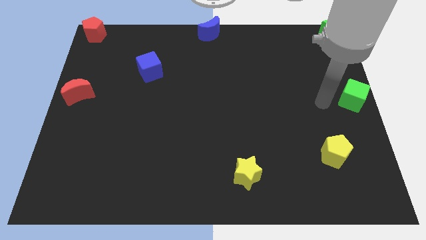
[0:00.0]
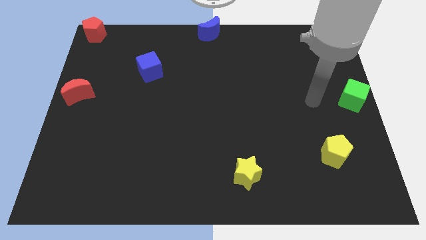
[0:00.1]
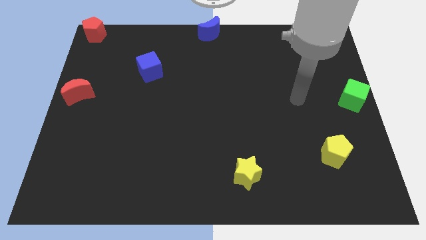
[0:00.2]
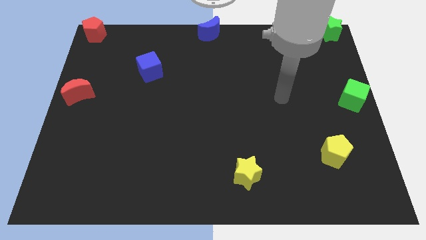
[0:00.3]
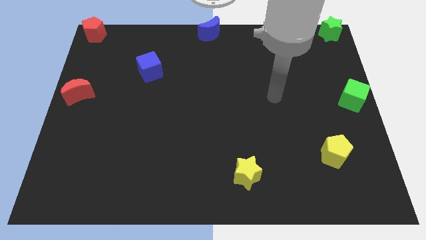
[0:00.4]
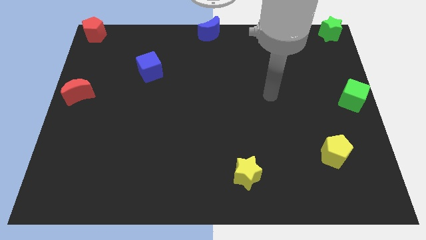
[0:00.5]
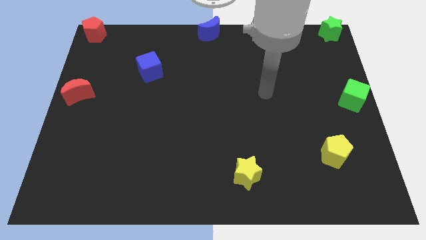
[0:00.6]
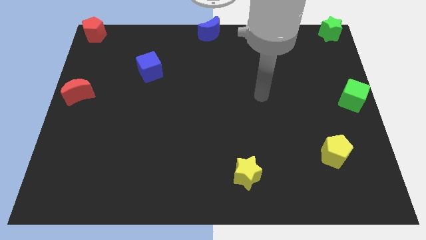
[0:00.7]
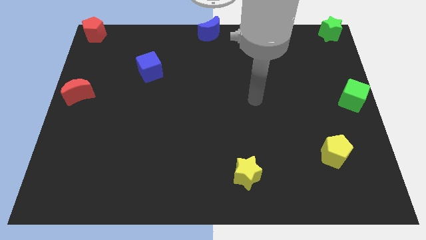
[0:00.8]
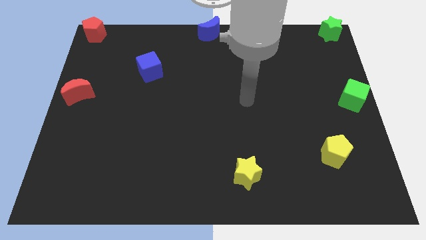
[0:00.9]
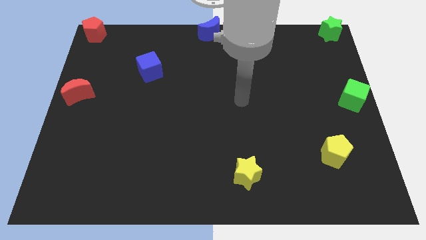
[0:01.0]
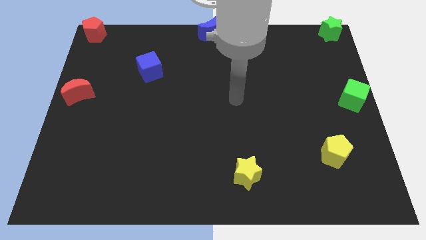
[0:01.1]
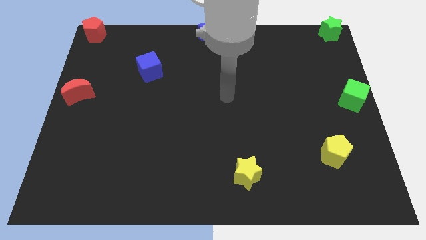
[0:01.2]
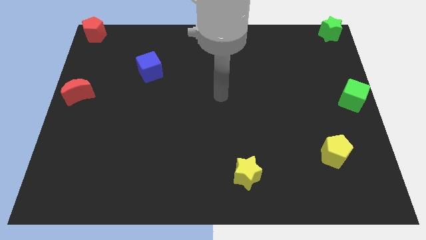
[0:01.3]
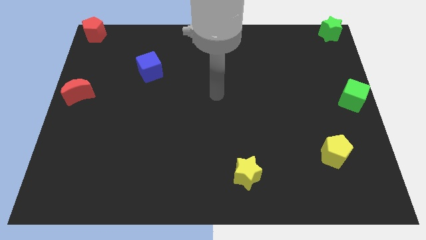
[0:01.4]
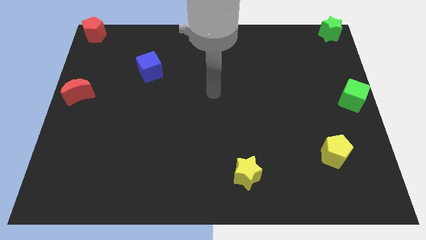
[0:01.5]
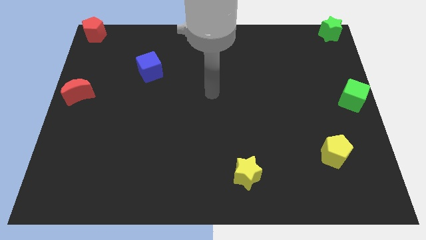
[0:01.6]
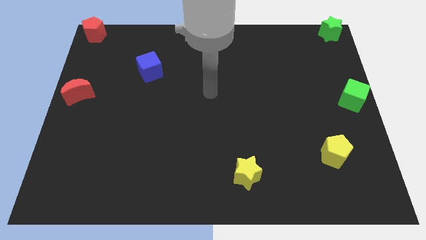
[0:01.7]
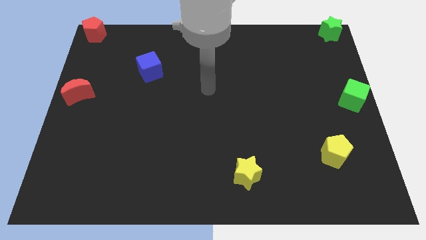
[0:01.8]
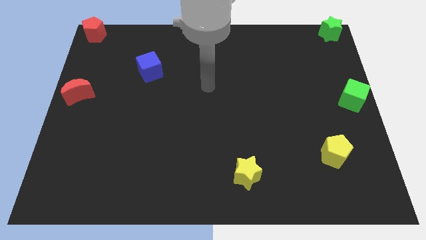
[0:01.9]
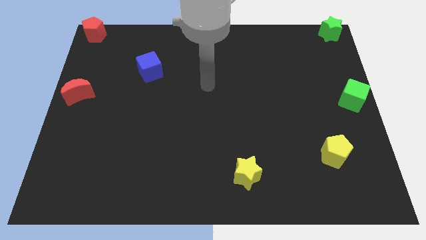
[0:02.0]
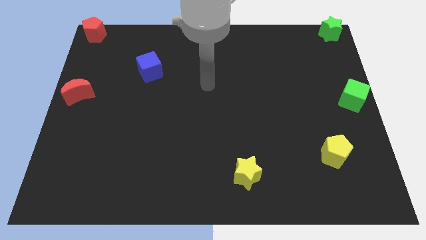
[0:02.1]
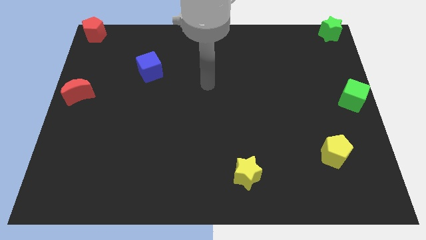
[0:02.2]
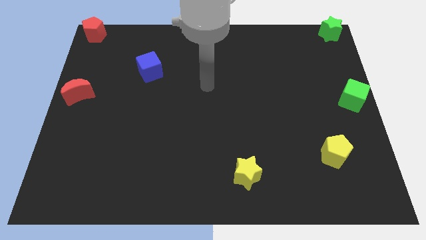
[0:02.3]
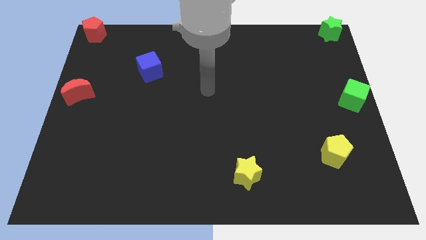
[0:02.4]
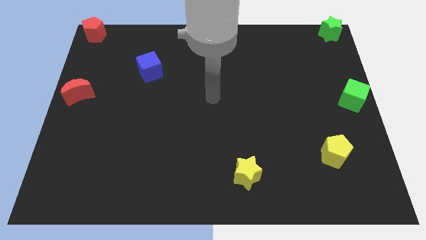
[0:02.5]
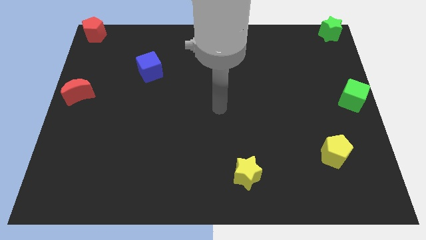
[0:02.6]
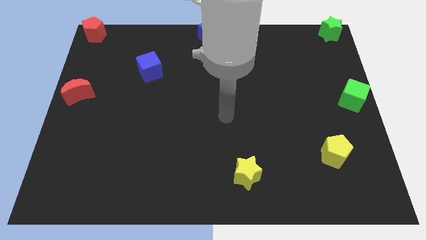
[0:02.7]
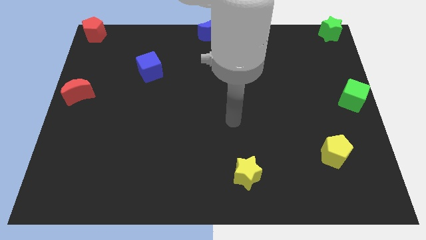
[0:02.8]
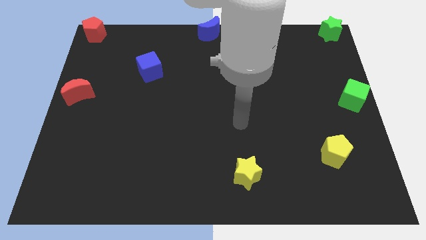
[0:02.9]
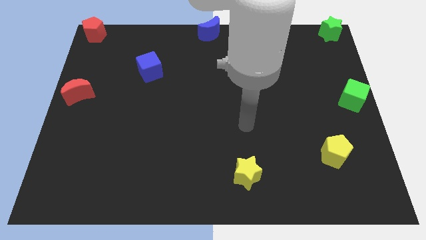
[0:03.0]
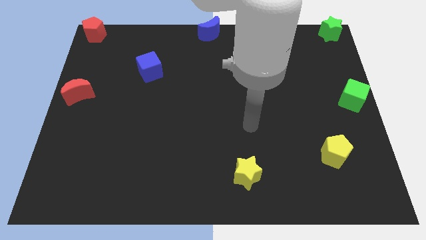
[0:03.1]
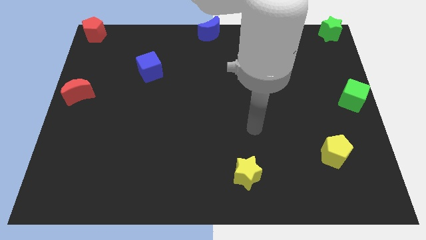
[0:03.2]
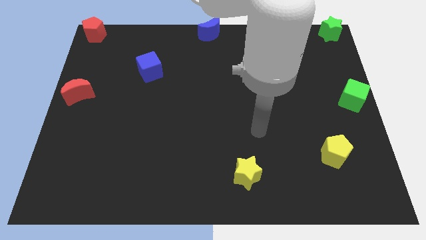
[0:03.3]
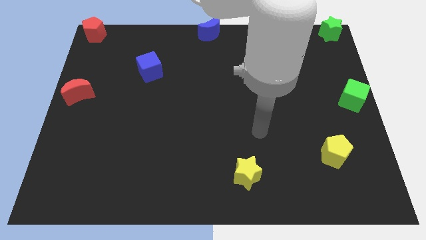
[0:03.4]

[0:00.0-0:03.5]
move your arm away from green cube

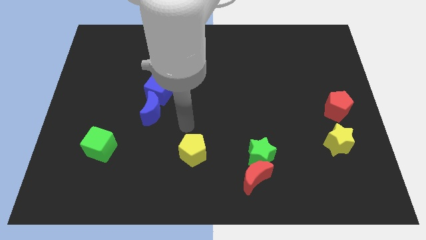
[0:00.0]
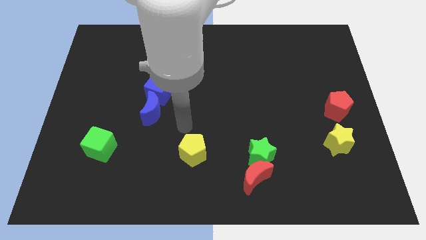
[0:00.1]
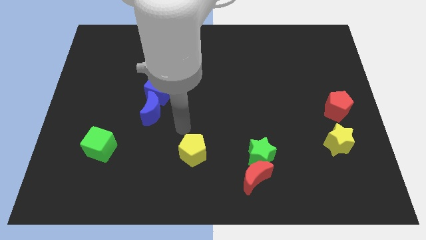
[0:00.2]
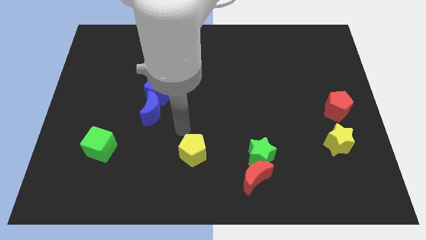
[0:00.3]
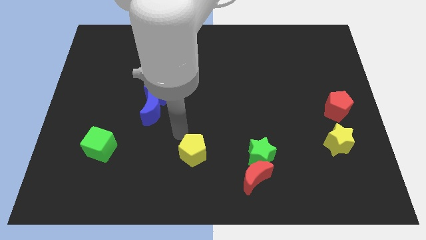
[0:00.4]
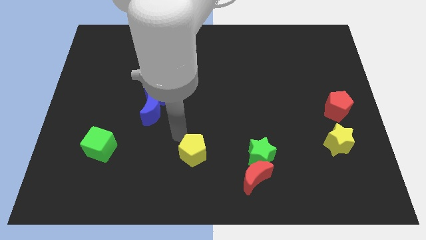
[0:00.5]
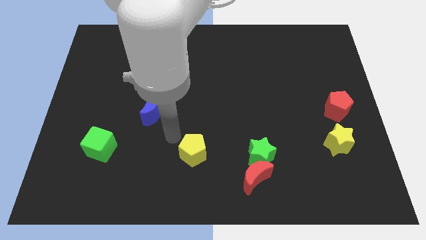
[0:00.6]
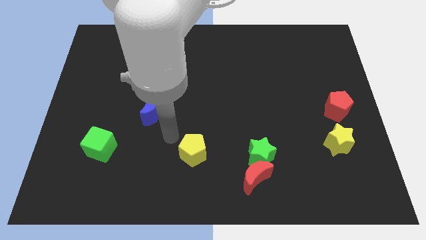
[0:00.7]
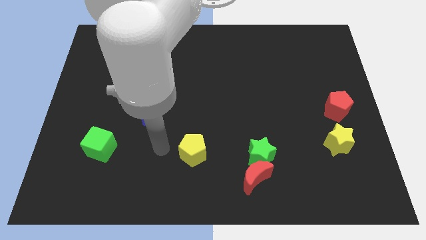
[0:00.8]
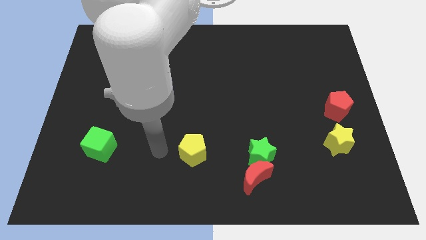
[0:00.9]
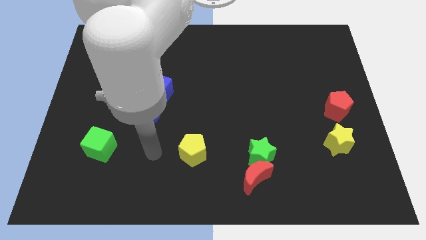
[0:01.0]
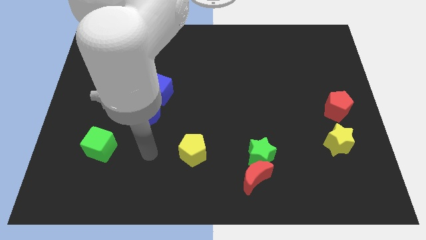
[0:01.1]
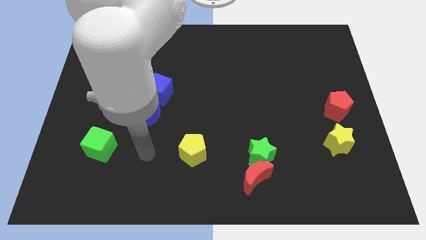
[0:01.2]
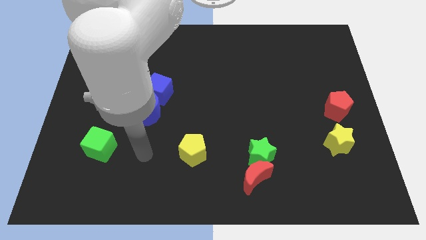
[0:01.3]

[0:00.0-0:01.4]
point your arm in between the green cube and yellow pentagon

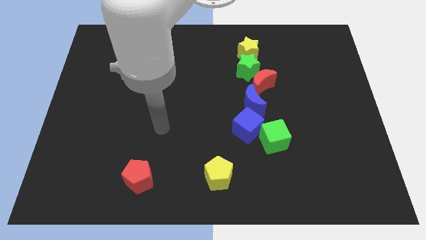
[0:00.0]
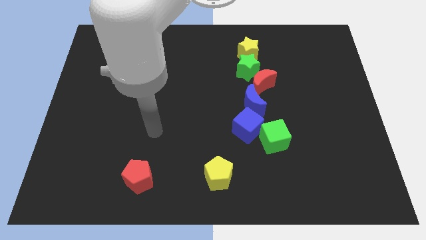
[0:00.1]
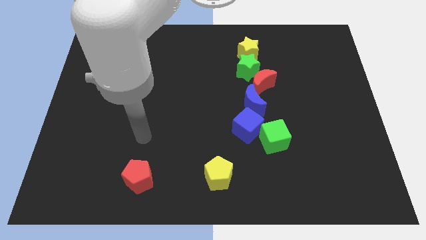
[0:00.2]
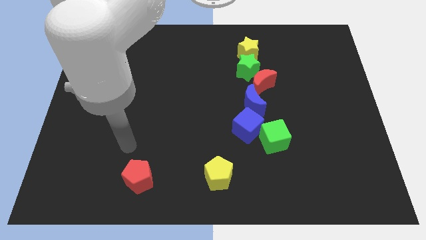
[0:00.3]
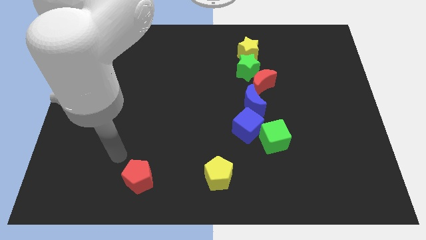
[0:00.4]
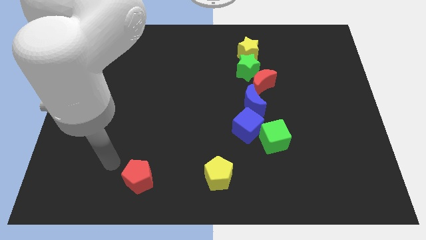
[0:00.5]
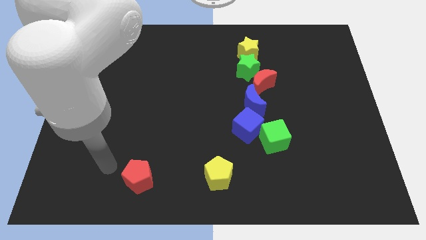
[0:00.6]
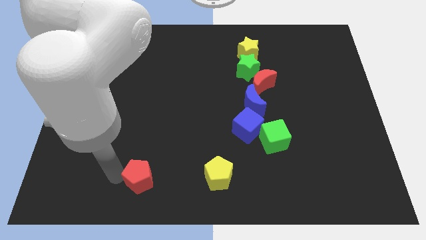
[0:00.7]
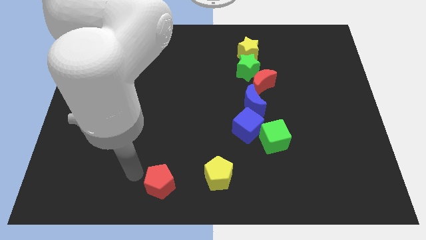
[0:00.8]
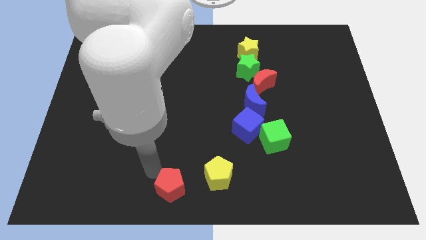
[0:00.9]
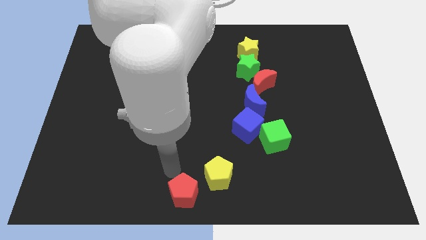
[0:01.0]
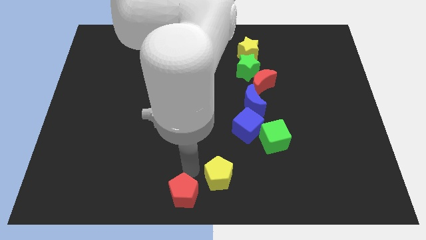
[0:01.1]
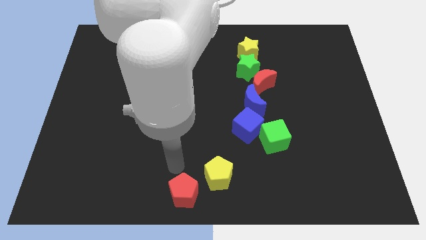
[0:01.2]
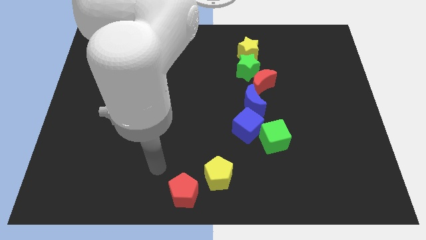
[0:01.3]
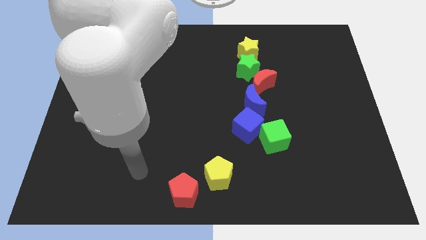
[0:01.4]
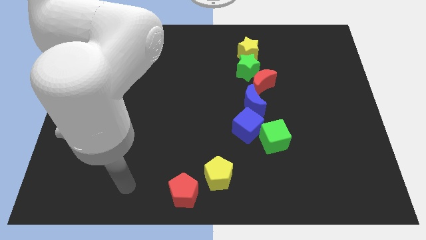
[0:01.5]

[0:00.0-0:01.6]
move the red pentagon to the bottom center

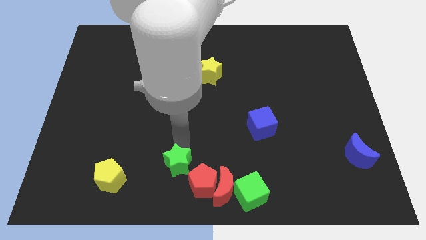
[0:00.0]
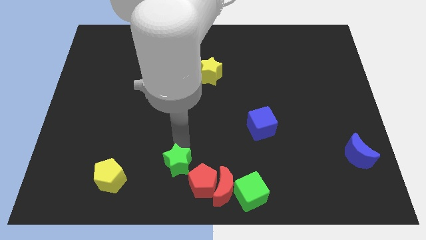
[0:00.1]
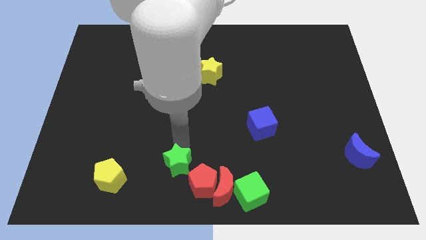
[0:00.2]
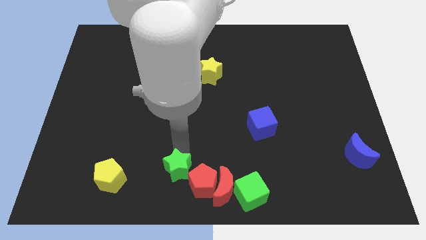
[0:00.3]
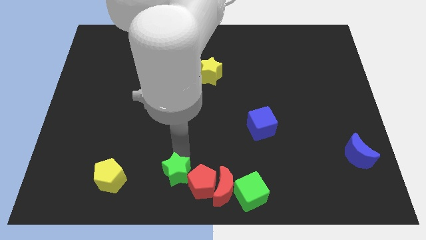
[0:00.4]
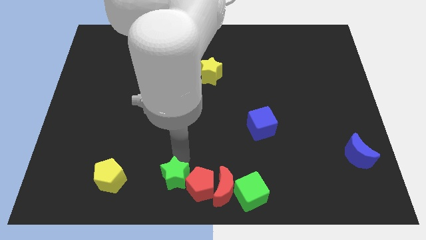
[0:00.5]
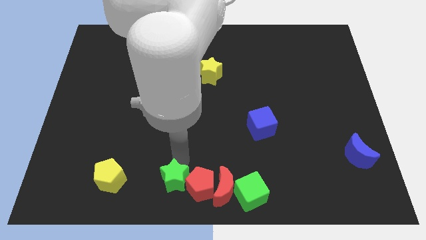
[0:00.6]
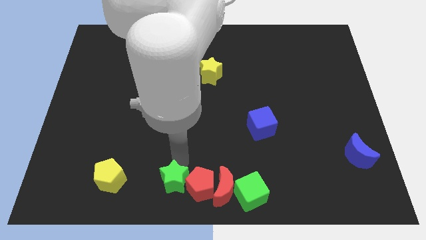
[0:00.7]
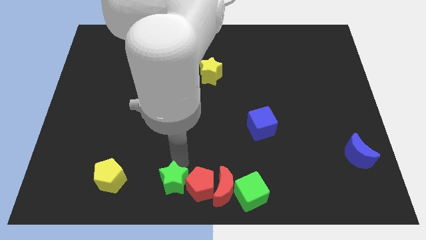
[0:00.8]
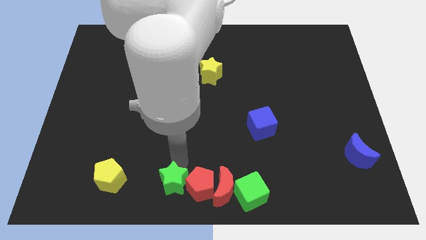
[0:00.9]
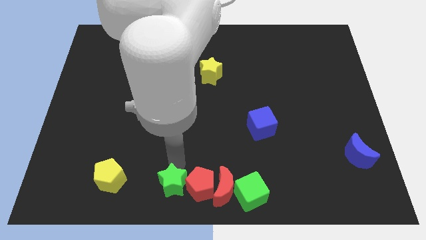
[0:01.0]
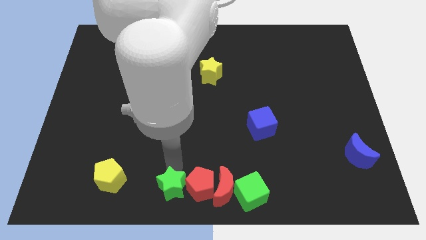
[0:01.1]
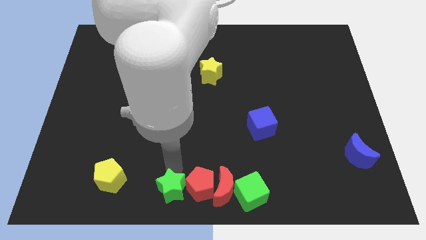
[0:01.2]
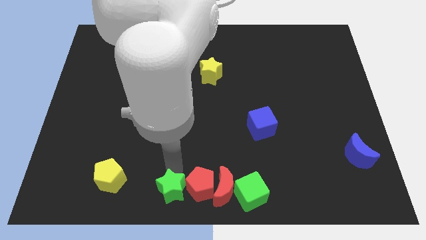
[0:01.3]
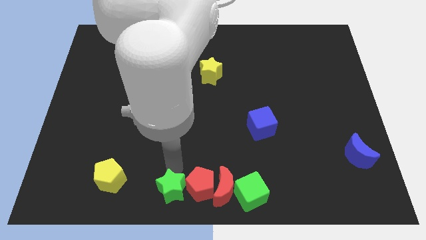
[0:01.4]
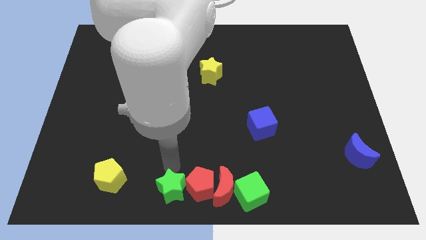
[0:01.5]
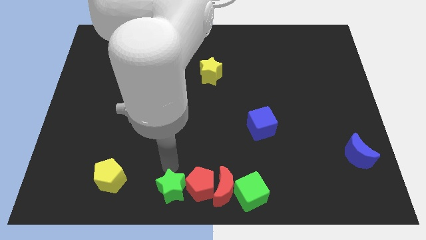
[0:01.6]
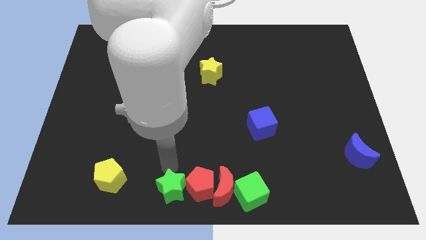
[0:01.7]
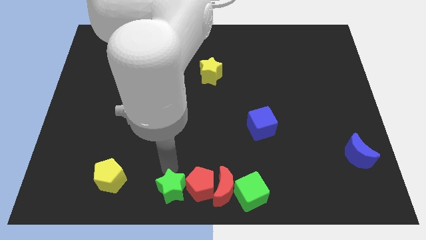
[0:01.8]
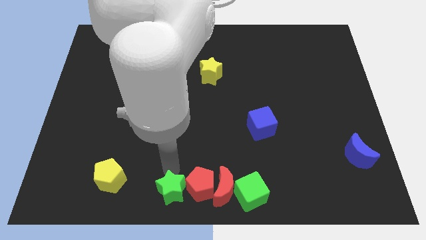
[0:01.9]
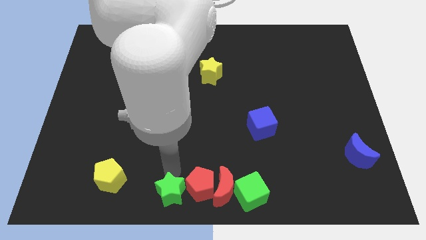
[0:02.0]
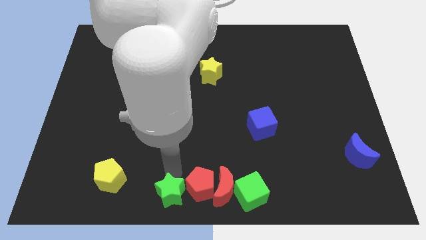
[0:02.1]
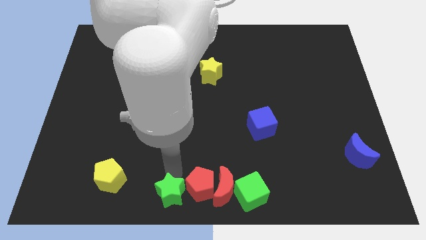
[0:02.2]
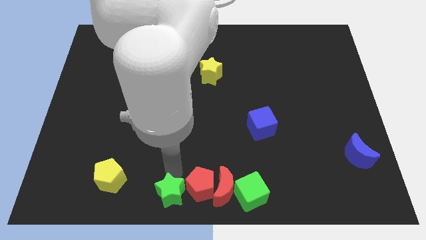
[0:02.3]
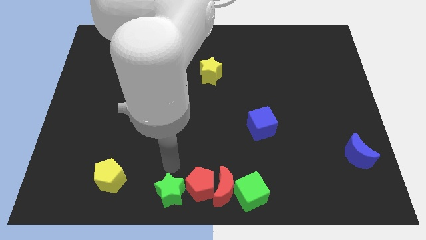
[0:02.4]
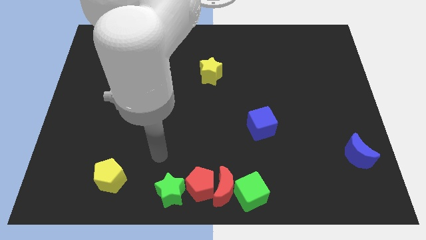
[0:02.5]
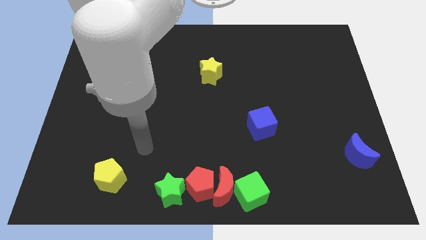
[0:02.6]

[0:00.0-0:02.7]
place the green star beside red pentafgon
